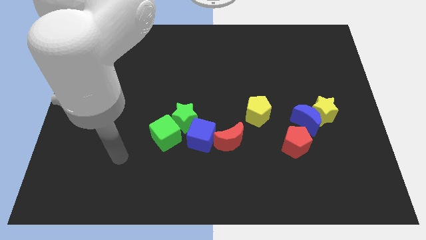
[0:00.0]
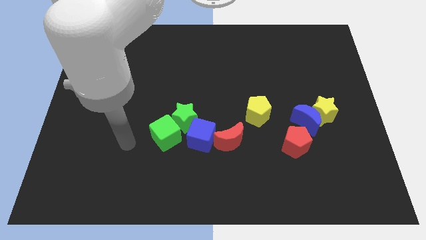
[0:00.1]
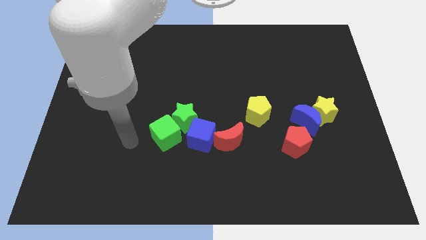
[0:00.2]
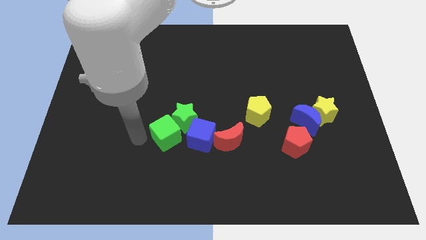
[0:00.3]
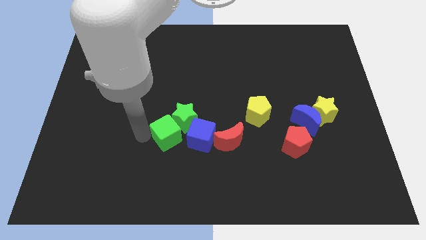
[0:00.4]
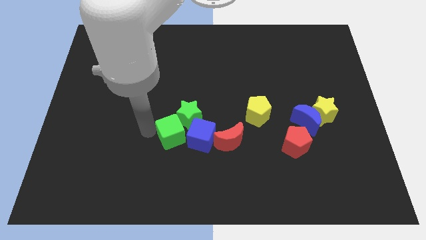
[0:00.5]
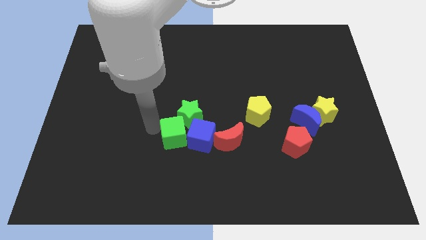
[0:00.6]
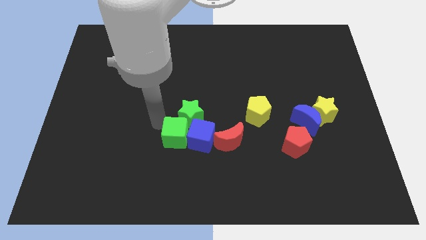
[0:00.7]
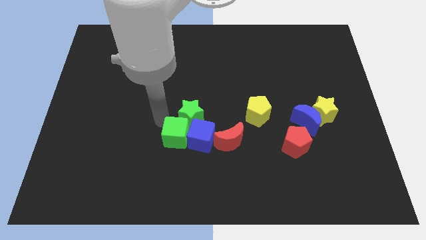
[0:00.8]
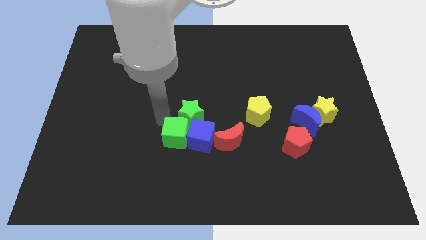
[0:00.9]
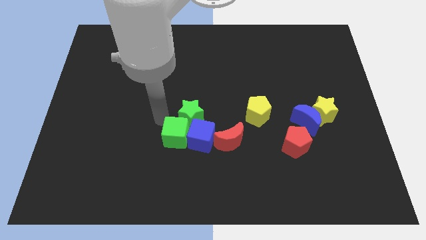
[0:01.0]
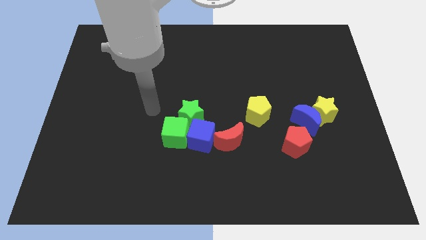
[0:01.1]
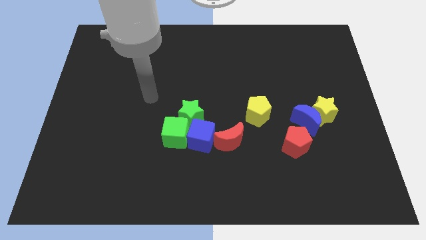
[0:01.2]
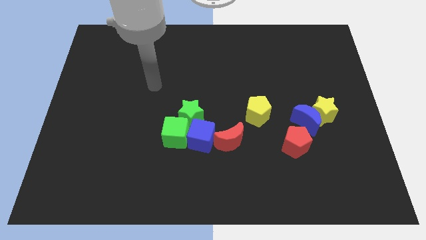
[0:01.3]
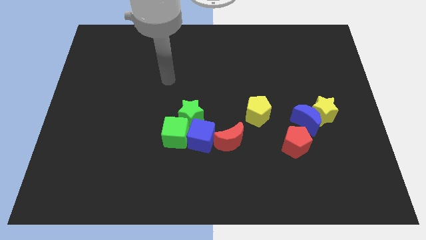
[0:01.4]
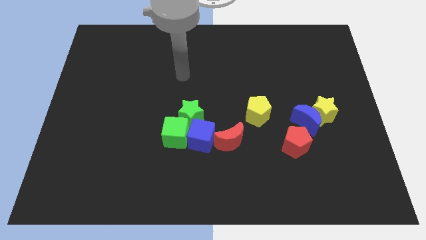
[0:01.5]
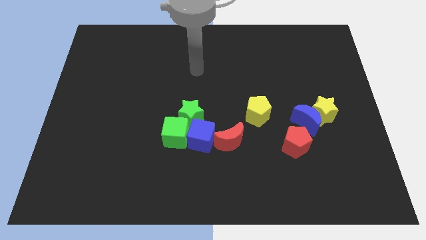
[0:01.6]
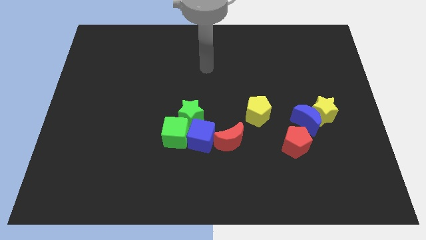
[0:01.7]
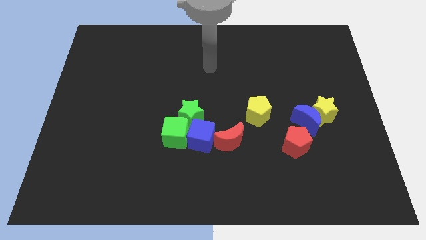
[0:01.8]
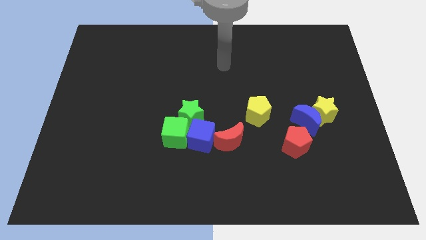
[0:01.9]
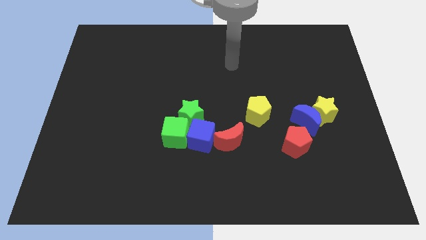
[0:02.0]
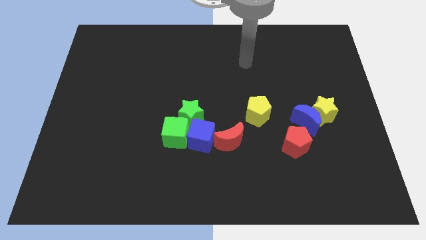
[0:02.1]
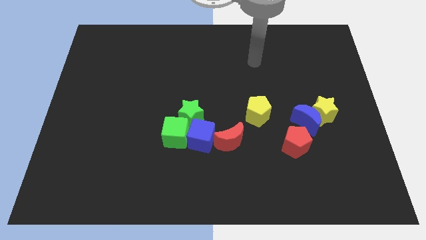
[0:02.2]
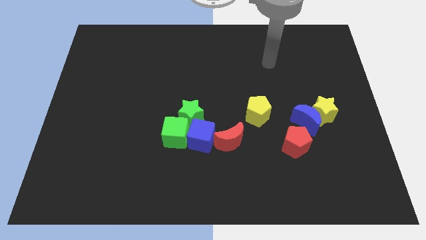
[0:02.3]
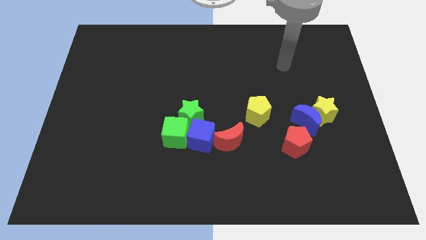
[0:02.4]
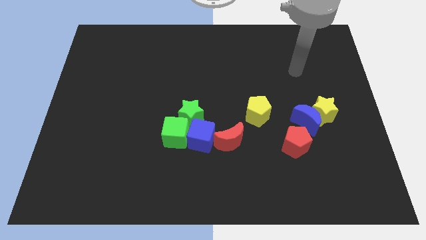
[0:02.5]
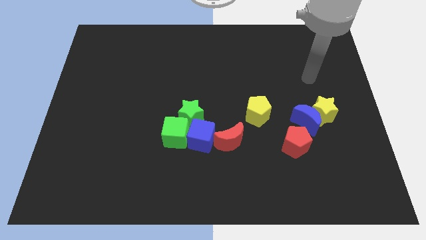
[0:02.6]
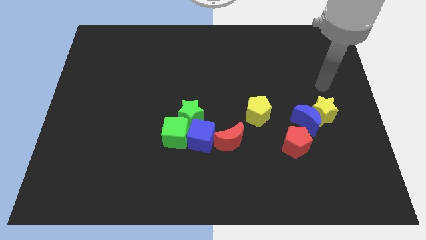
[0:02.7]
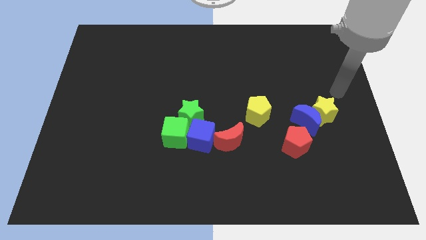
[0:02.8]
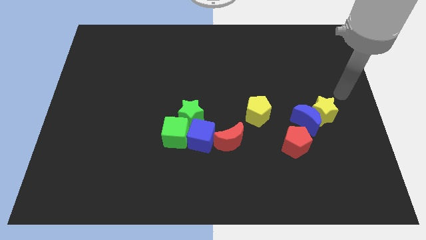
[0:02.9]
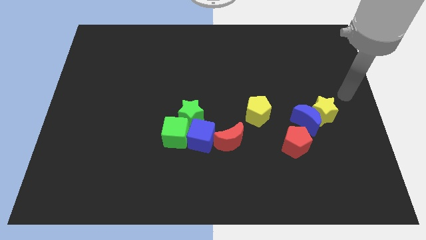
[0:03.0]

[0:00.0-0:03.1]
push green cube into blue cube

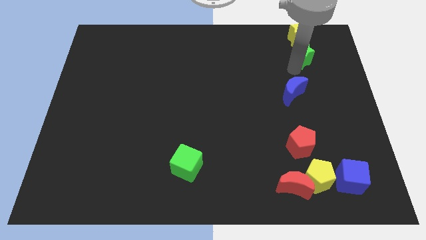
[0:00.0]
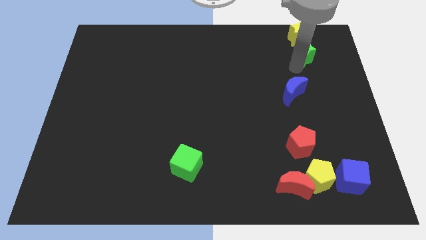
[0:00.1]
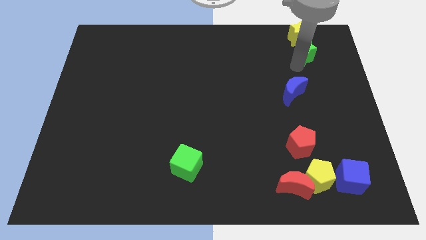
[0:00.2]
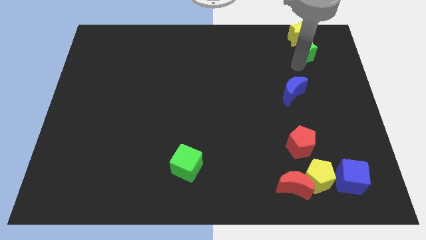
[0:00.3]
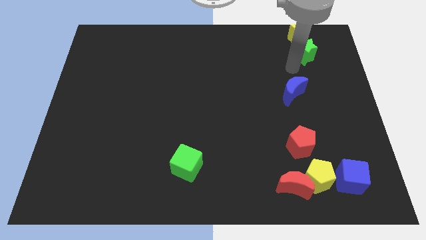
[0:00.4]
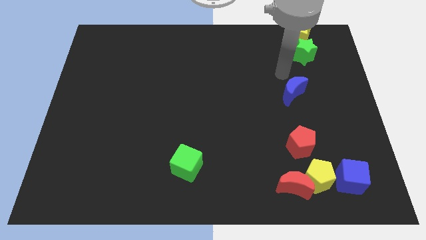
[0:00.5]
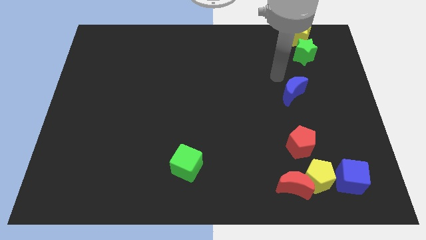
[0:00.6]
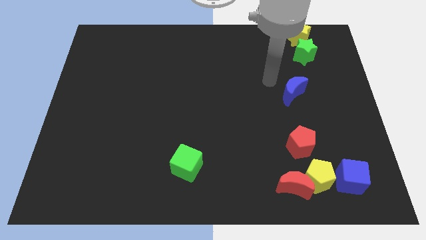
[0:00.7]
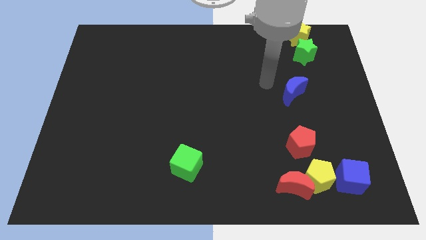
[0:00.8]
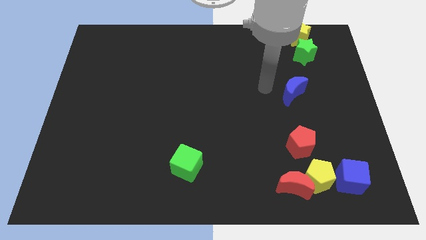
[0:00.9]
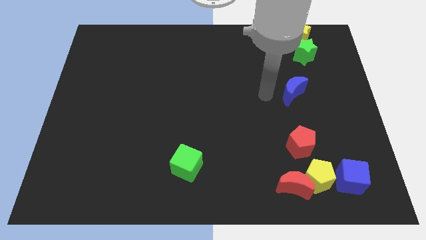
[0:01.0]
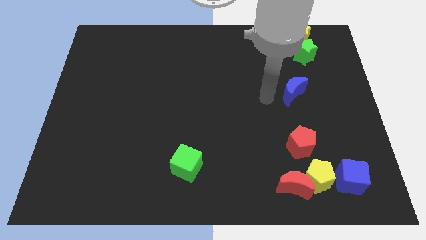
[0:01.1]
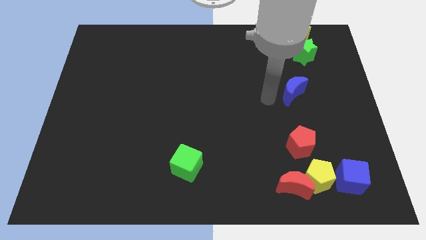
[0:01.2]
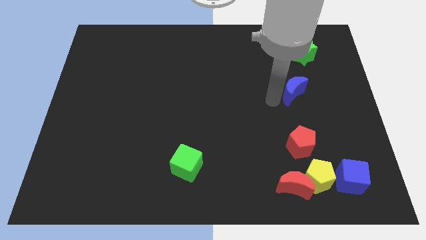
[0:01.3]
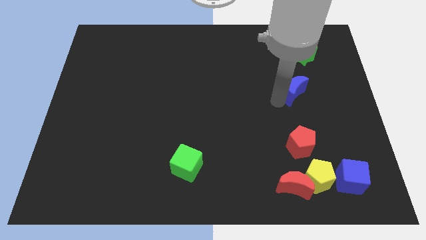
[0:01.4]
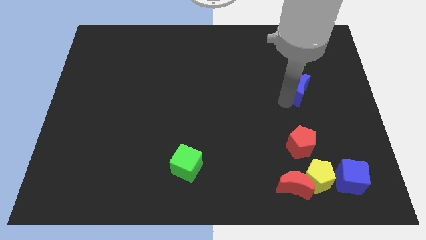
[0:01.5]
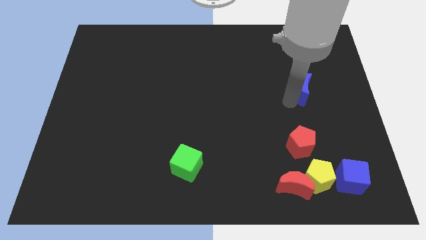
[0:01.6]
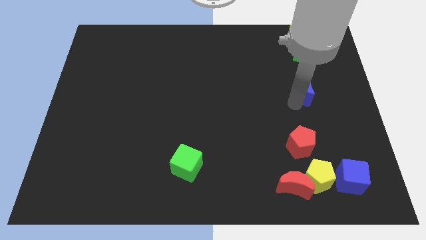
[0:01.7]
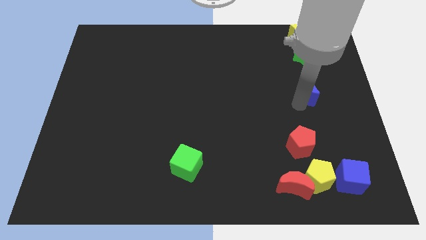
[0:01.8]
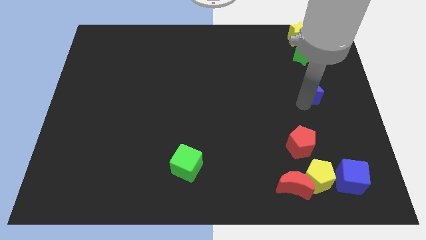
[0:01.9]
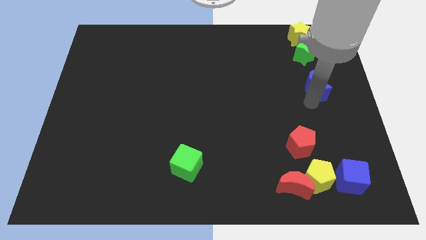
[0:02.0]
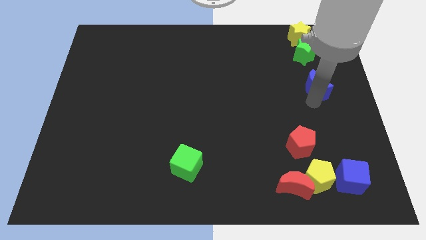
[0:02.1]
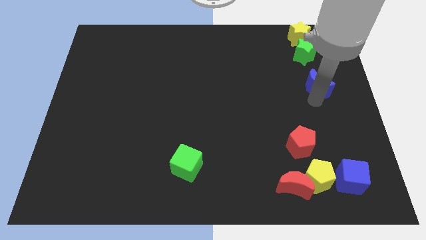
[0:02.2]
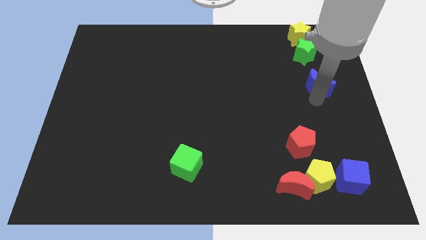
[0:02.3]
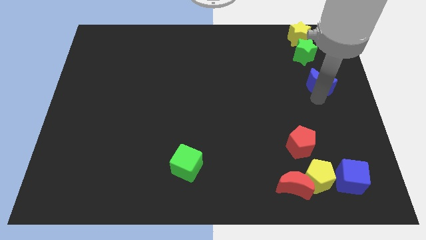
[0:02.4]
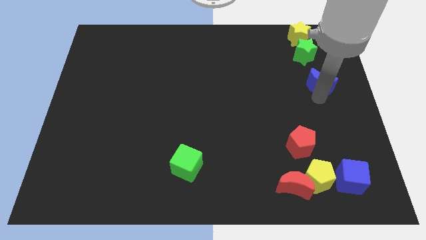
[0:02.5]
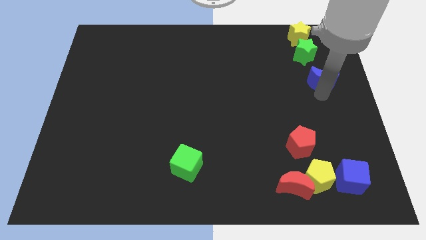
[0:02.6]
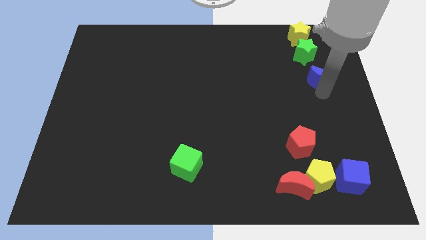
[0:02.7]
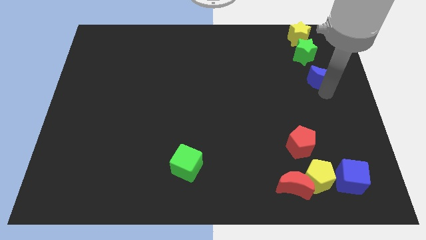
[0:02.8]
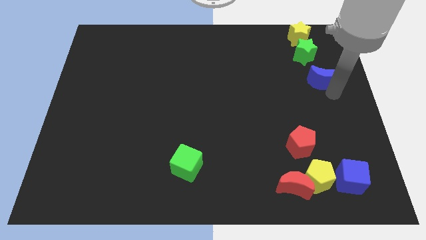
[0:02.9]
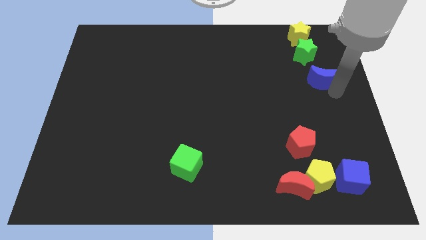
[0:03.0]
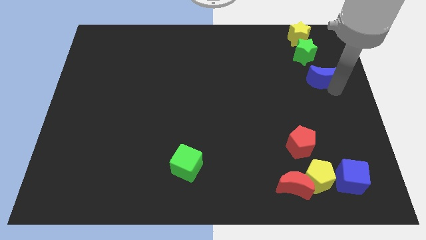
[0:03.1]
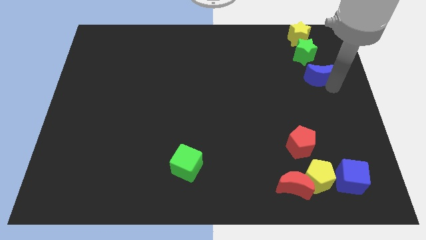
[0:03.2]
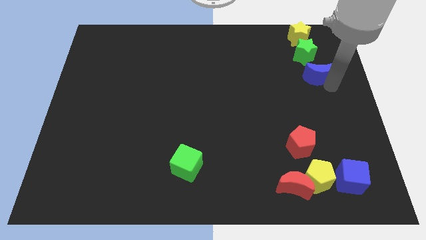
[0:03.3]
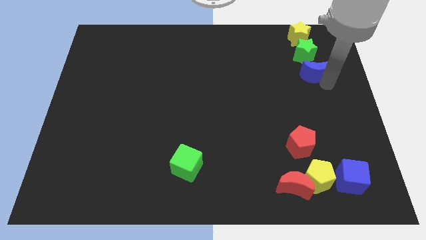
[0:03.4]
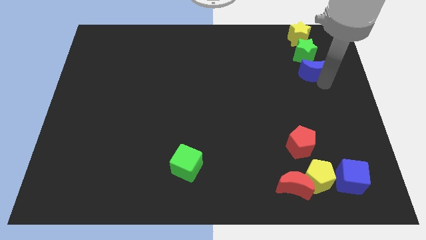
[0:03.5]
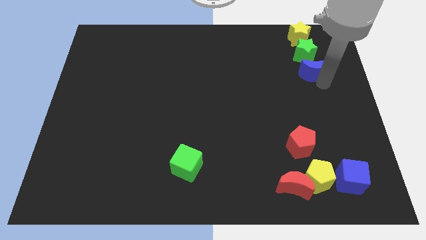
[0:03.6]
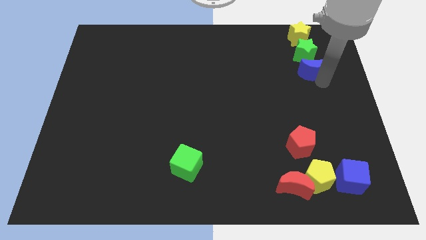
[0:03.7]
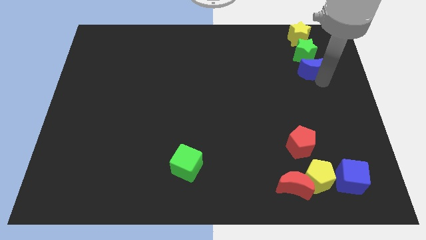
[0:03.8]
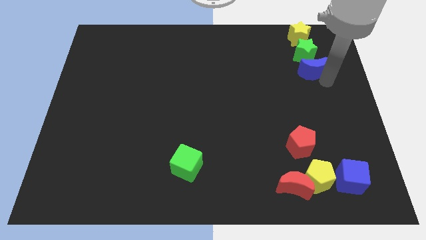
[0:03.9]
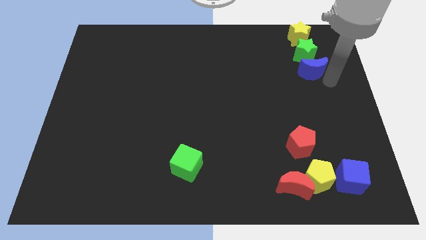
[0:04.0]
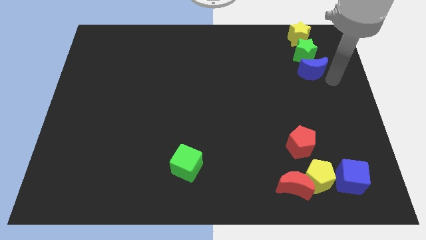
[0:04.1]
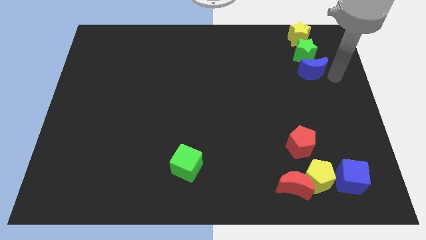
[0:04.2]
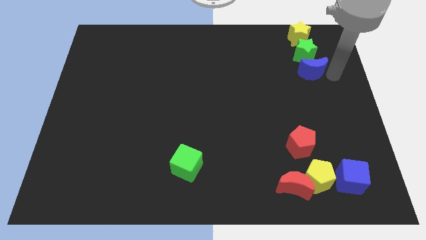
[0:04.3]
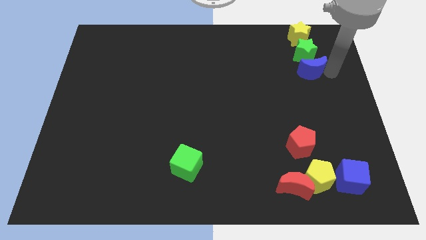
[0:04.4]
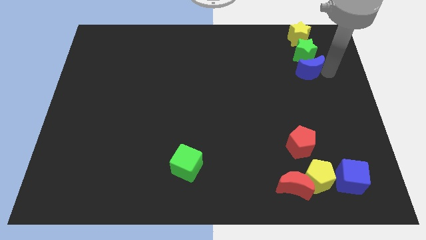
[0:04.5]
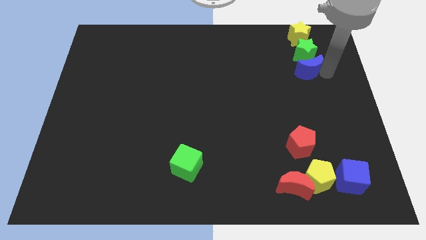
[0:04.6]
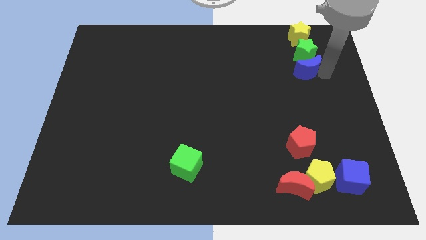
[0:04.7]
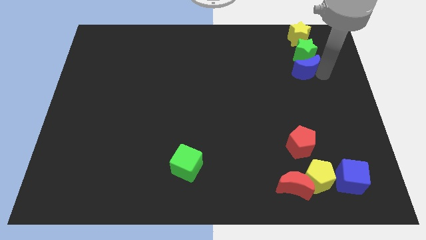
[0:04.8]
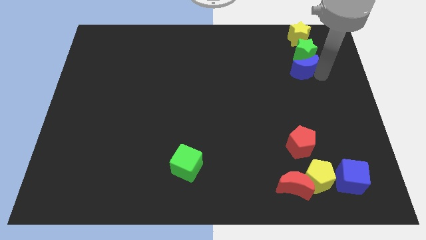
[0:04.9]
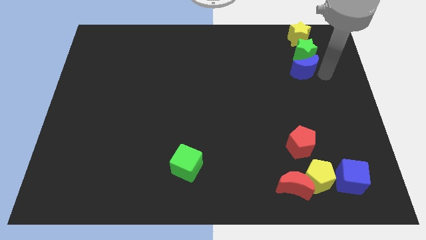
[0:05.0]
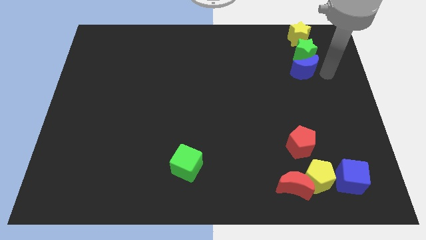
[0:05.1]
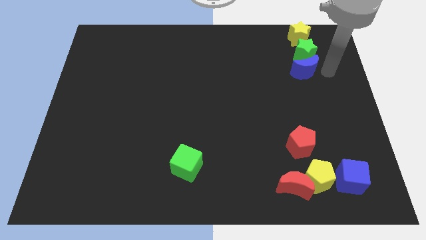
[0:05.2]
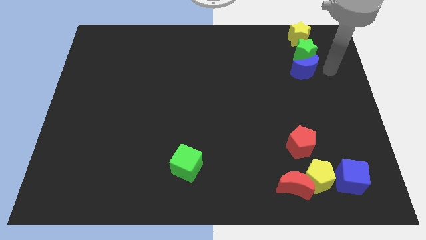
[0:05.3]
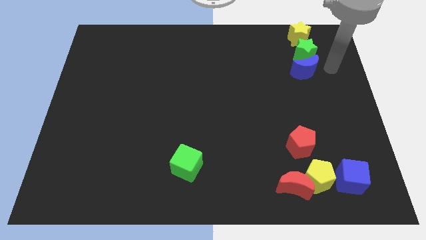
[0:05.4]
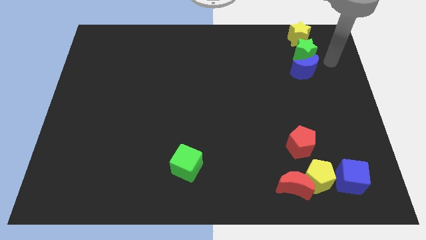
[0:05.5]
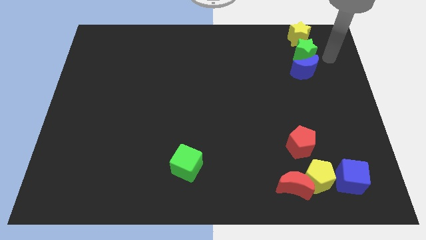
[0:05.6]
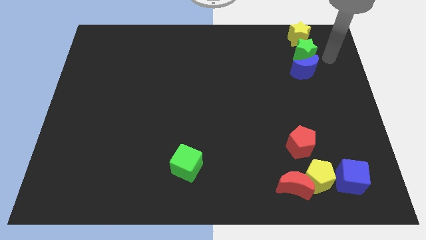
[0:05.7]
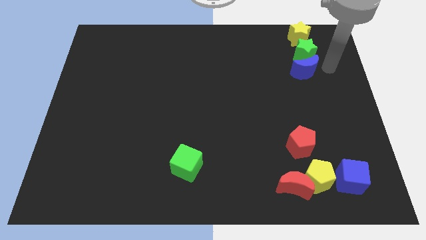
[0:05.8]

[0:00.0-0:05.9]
push the blue moon upward
